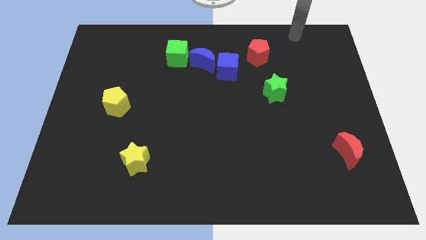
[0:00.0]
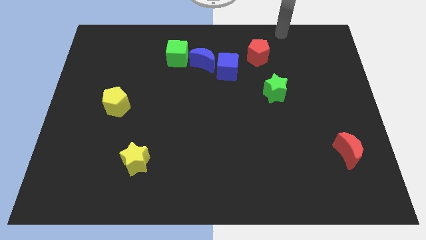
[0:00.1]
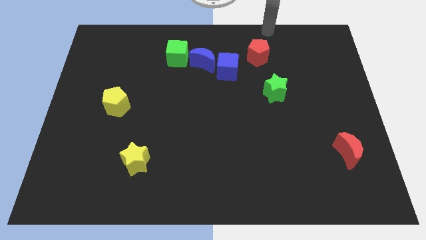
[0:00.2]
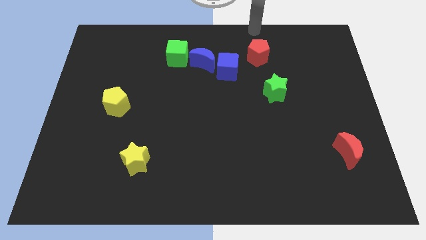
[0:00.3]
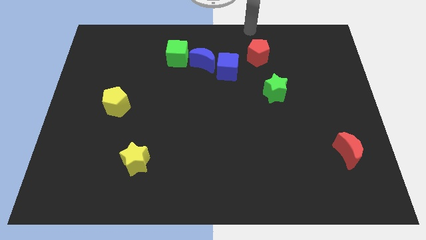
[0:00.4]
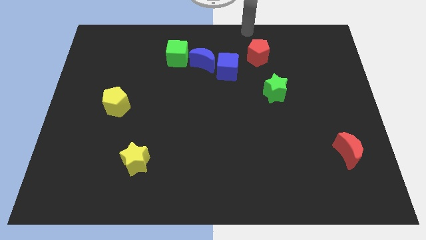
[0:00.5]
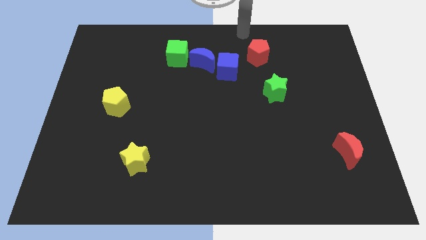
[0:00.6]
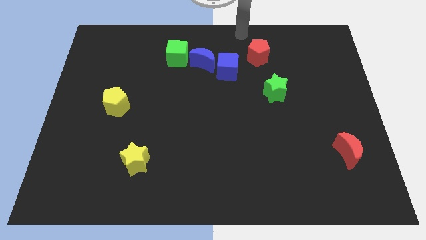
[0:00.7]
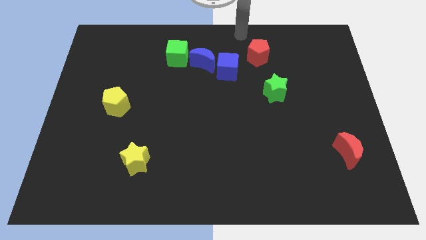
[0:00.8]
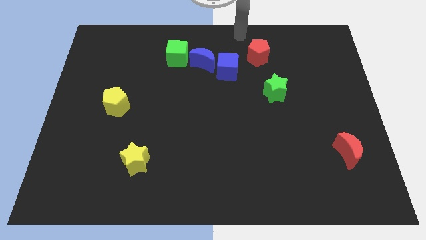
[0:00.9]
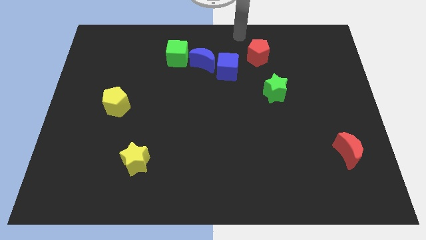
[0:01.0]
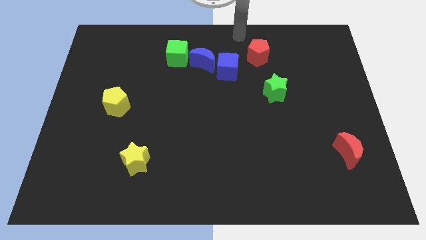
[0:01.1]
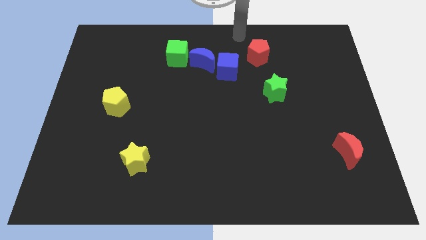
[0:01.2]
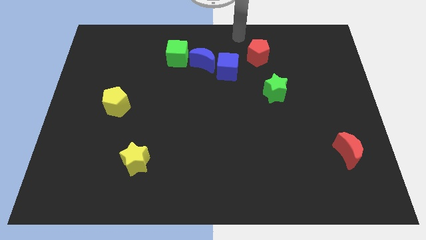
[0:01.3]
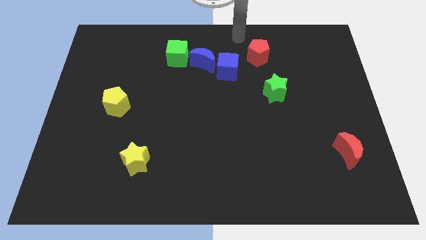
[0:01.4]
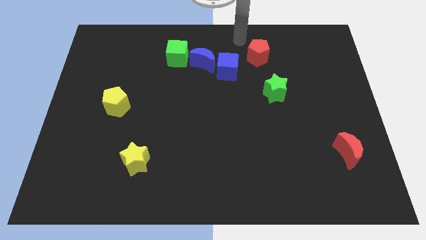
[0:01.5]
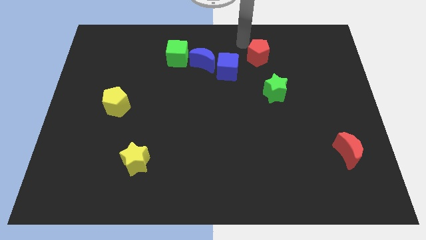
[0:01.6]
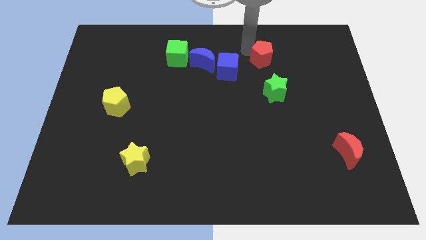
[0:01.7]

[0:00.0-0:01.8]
place your arm at the red pentagon

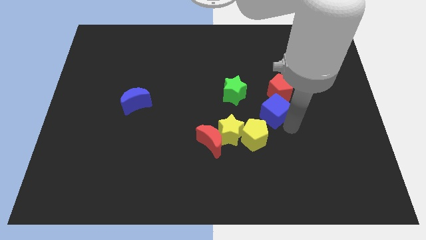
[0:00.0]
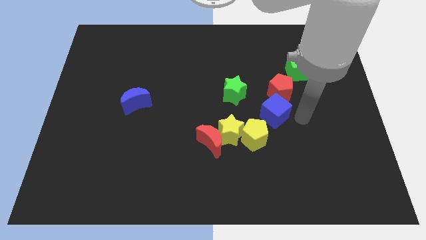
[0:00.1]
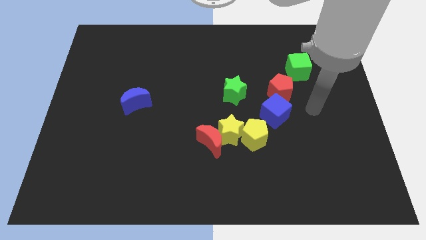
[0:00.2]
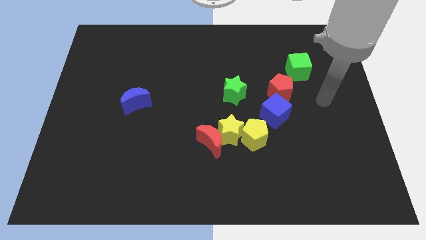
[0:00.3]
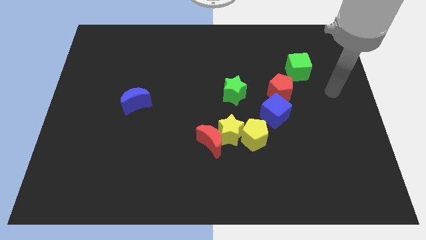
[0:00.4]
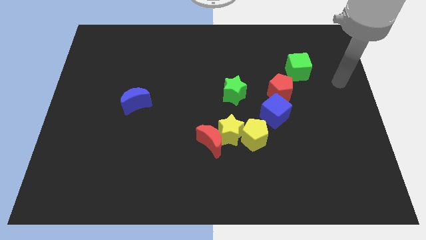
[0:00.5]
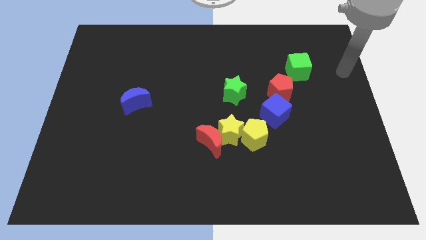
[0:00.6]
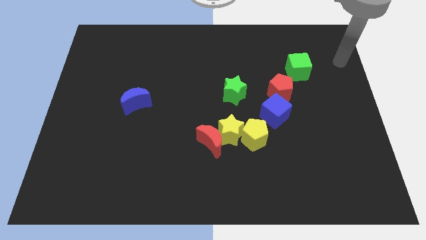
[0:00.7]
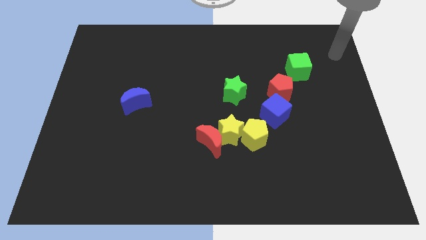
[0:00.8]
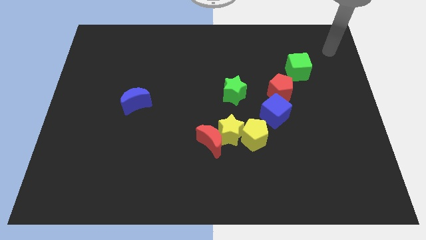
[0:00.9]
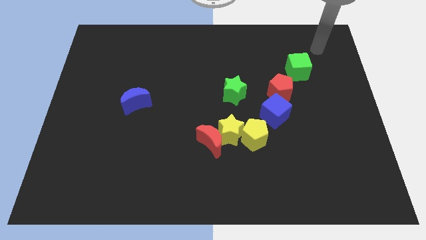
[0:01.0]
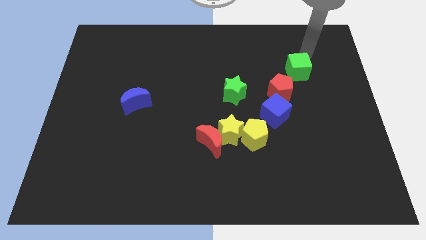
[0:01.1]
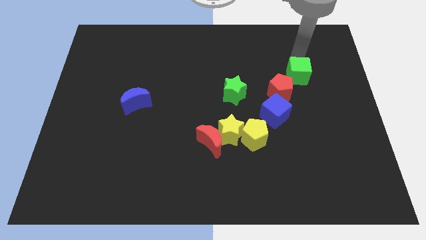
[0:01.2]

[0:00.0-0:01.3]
move the arm to the top right side of the green cube

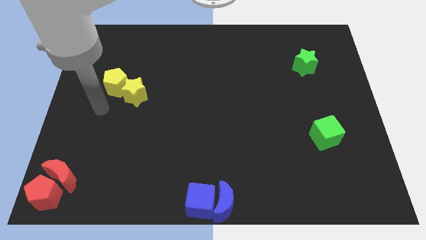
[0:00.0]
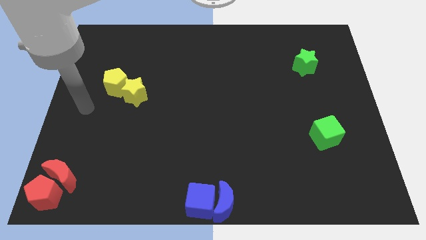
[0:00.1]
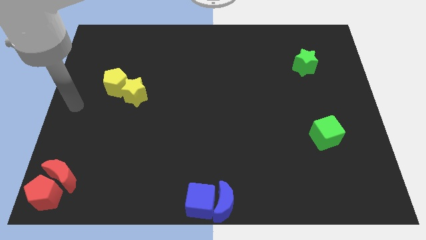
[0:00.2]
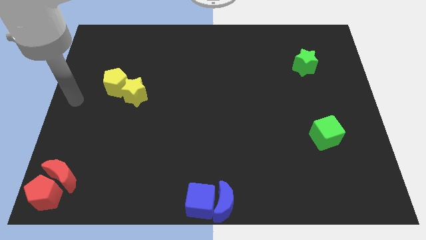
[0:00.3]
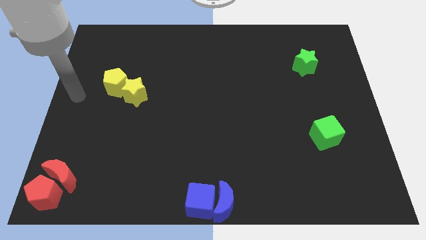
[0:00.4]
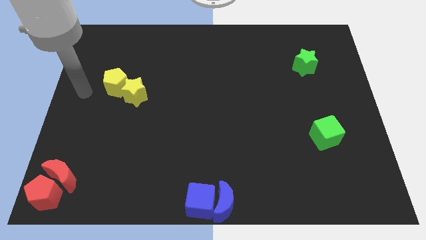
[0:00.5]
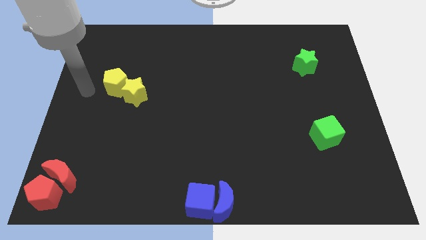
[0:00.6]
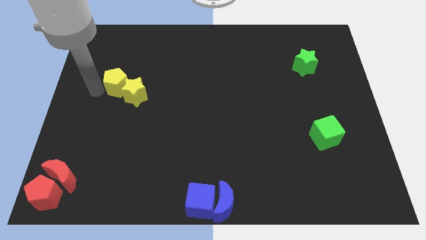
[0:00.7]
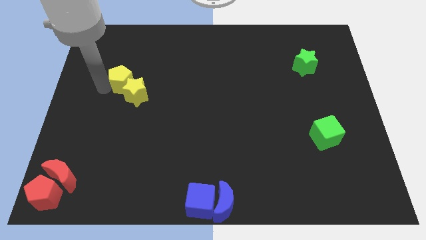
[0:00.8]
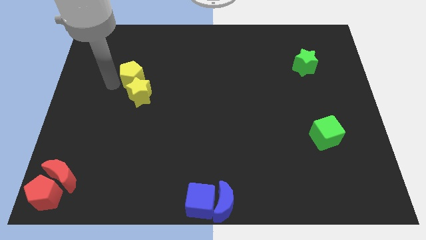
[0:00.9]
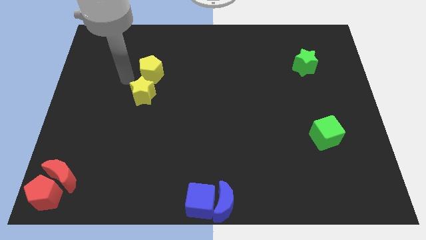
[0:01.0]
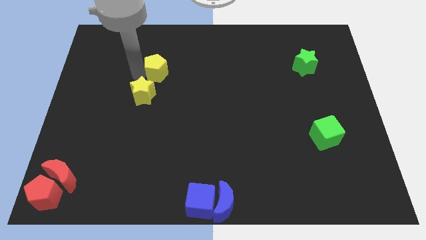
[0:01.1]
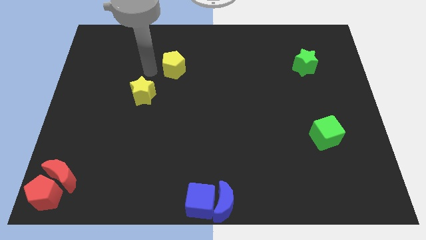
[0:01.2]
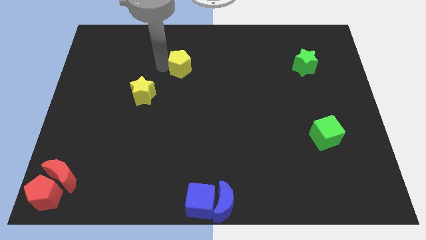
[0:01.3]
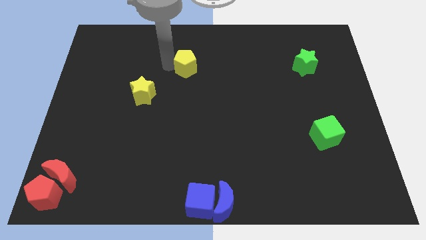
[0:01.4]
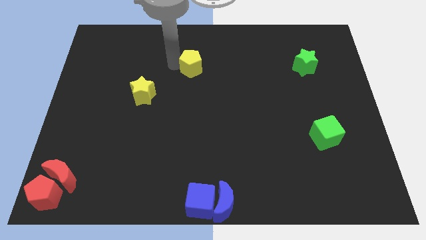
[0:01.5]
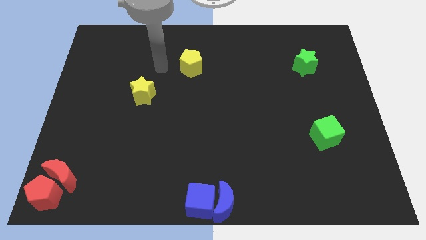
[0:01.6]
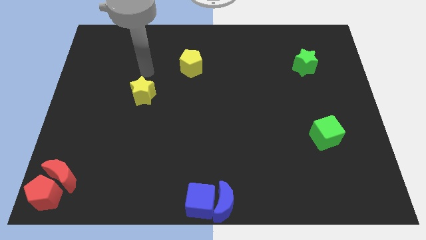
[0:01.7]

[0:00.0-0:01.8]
separate the yellow star and the yellow pentagon

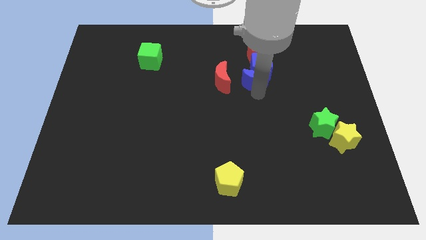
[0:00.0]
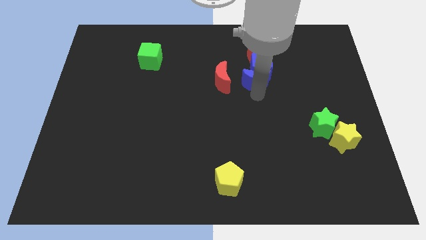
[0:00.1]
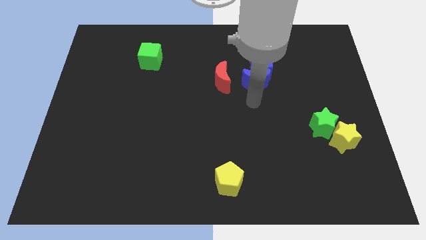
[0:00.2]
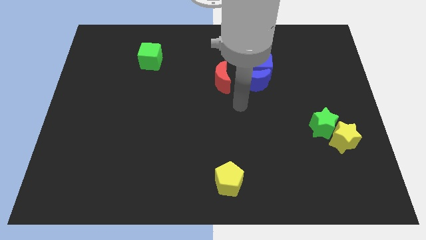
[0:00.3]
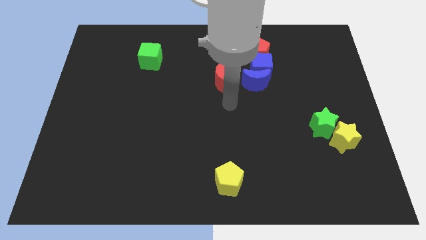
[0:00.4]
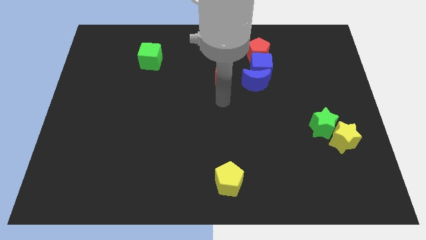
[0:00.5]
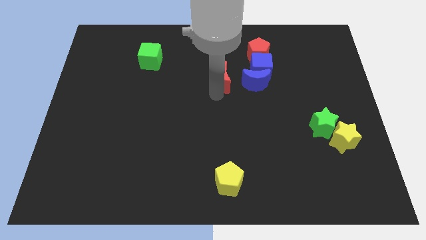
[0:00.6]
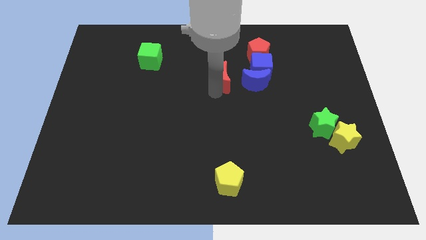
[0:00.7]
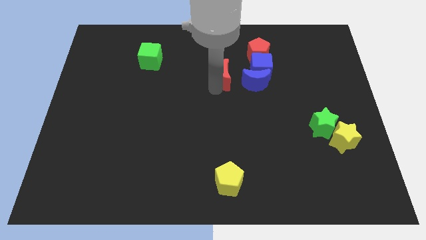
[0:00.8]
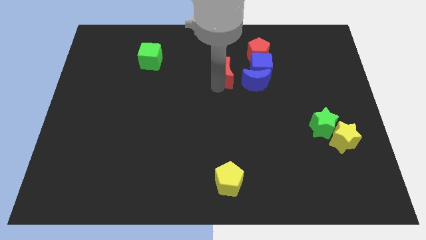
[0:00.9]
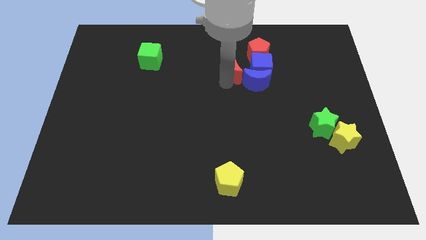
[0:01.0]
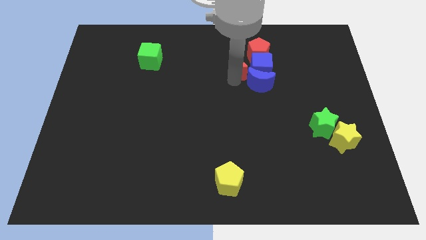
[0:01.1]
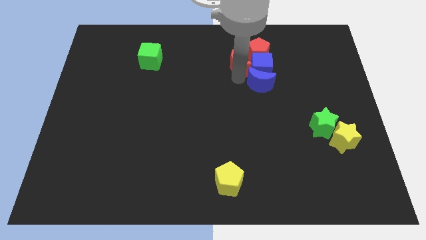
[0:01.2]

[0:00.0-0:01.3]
move the red moon to the top of the blue moon

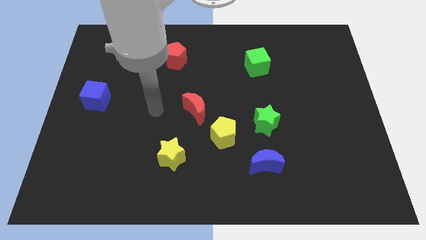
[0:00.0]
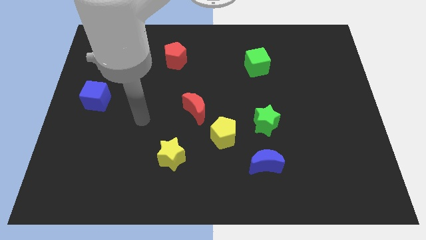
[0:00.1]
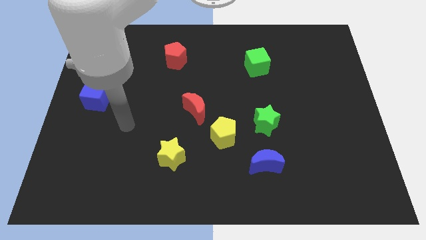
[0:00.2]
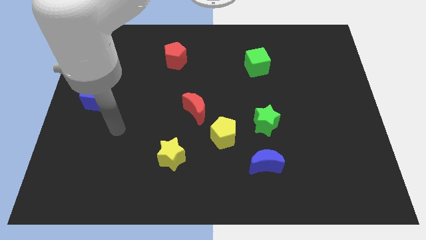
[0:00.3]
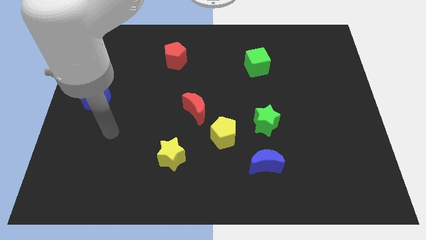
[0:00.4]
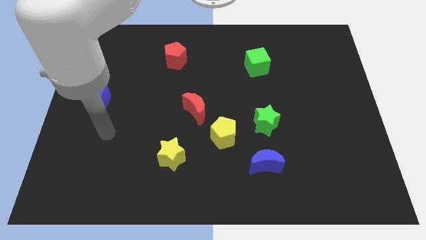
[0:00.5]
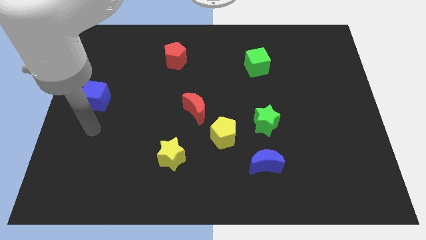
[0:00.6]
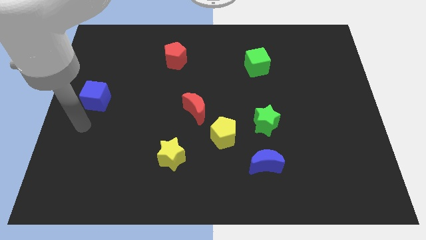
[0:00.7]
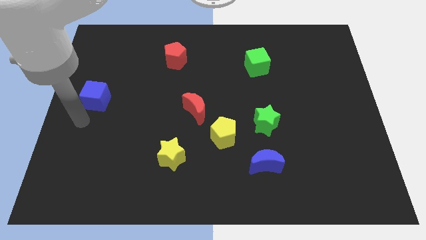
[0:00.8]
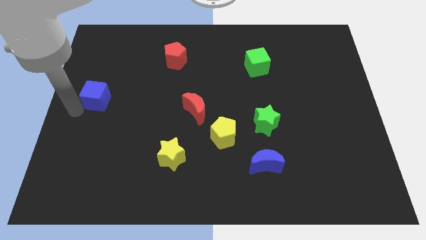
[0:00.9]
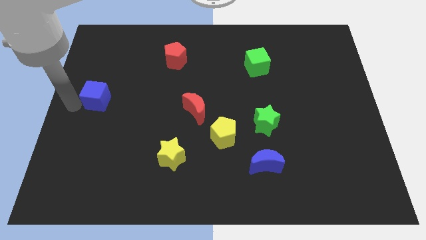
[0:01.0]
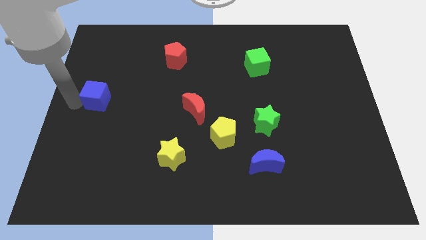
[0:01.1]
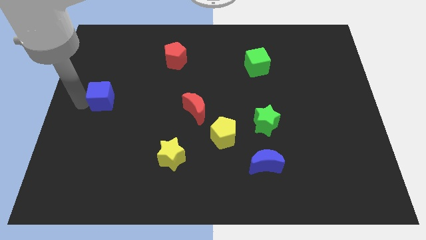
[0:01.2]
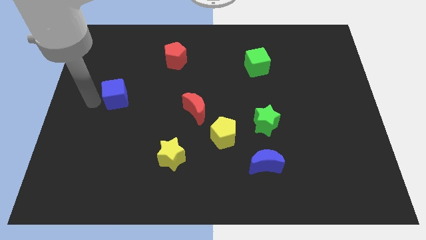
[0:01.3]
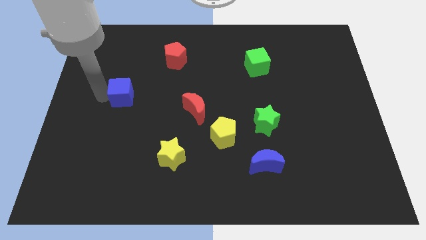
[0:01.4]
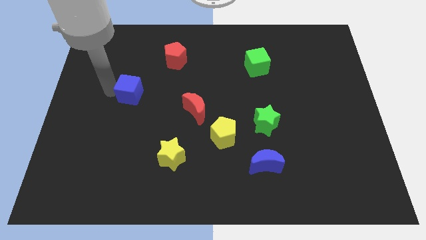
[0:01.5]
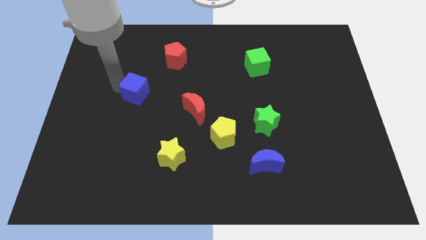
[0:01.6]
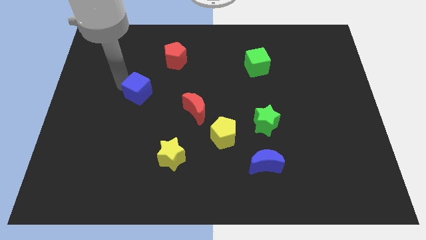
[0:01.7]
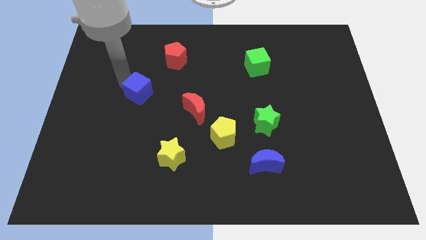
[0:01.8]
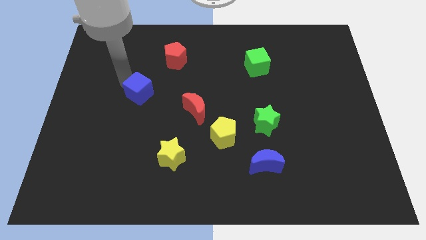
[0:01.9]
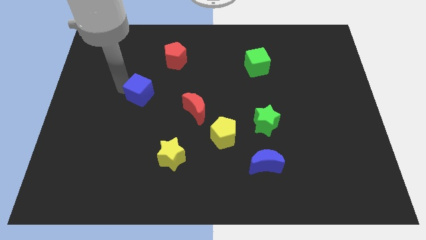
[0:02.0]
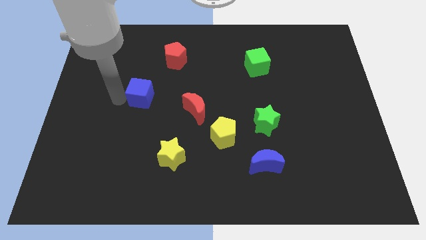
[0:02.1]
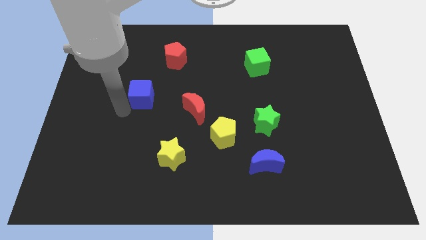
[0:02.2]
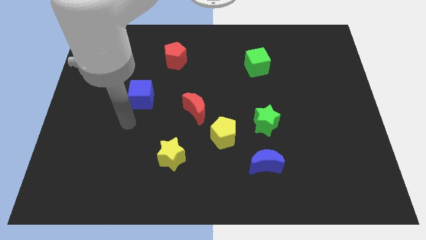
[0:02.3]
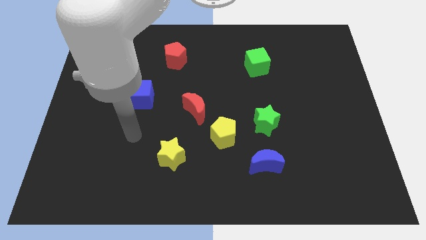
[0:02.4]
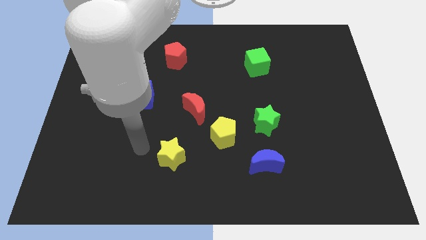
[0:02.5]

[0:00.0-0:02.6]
push the blue cube to the left of the red crescent
